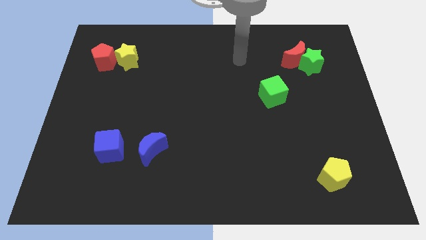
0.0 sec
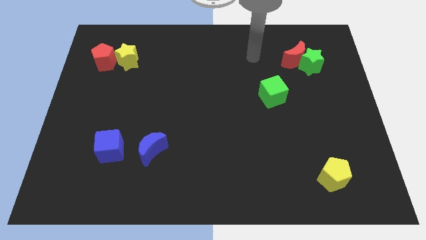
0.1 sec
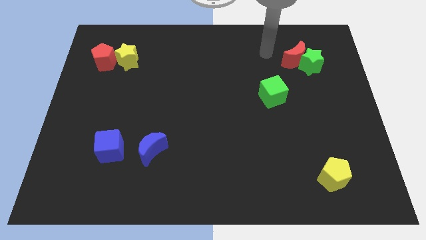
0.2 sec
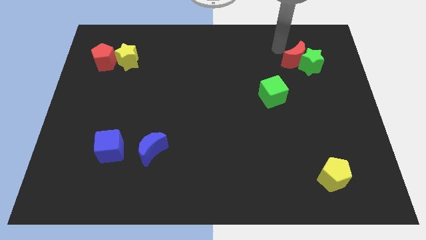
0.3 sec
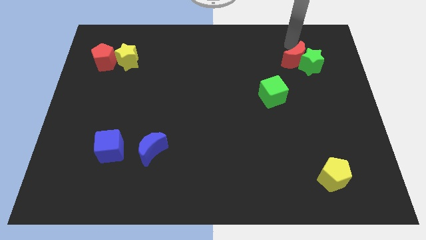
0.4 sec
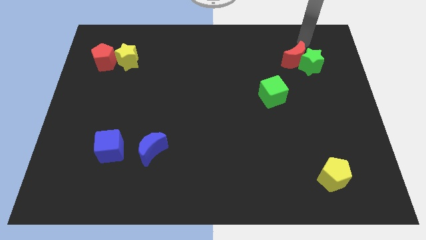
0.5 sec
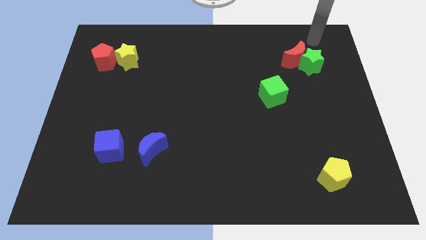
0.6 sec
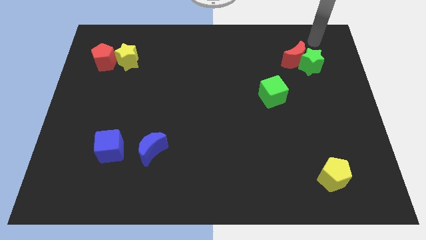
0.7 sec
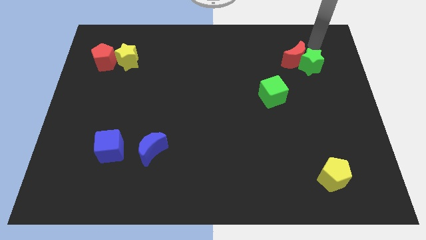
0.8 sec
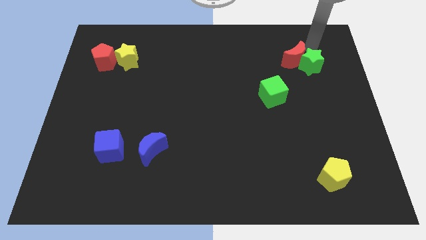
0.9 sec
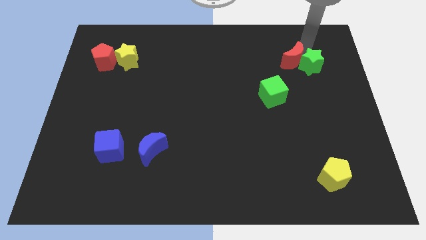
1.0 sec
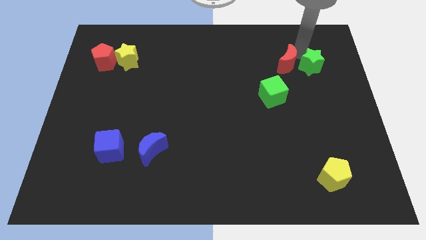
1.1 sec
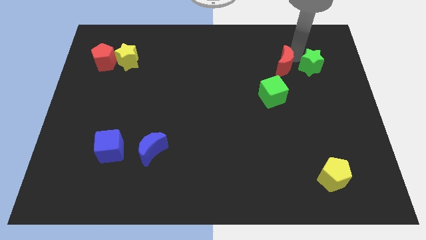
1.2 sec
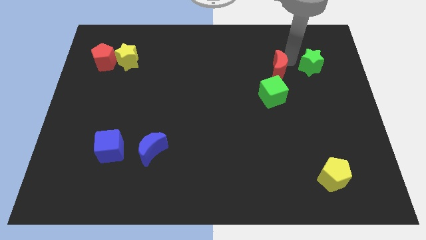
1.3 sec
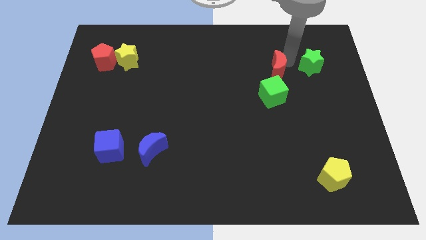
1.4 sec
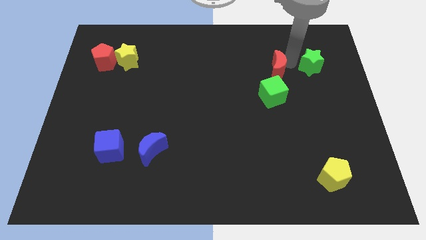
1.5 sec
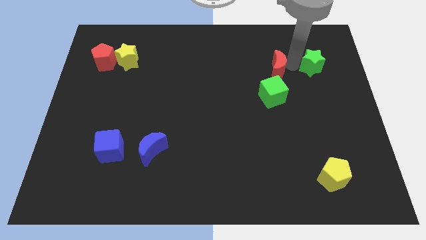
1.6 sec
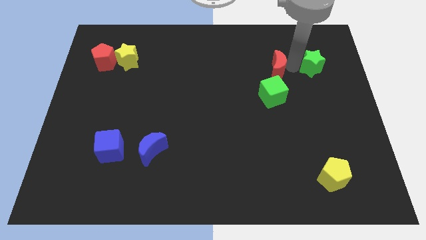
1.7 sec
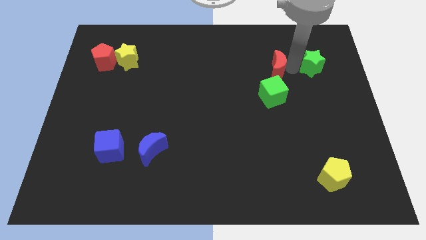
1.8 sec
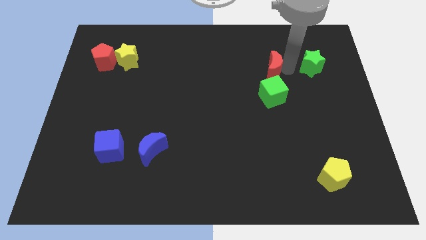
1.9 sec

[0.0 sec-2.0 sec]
place the red moon above the green cube

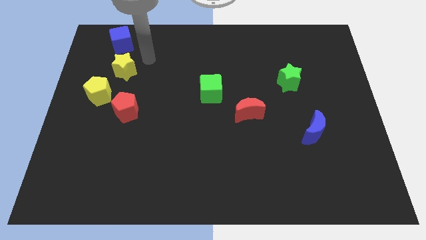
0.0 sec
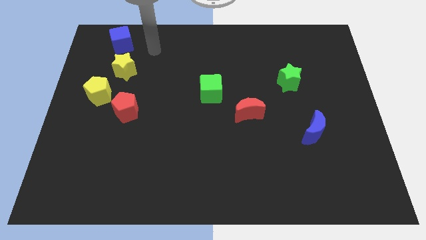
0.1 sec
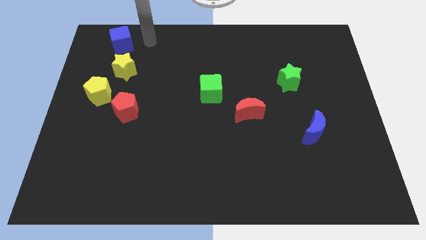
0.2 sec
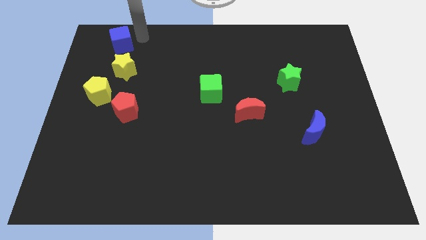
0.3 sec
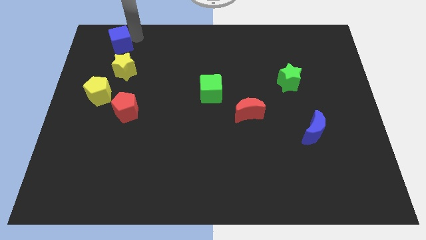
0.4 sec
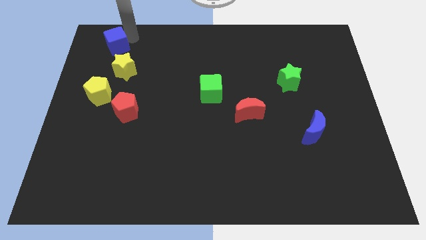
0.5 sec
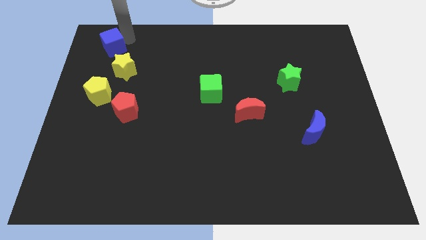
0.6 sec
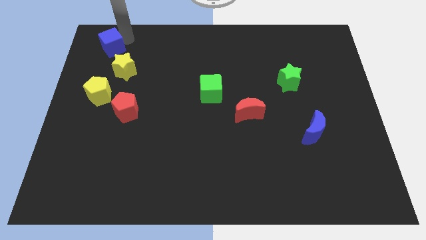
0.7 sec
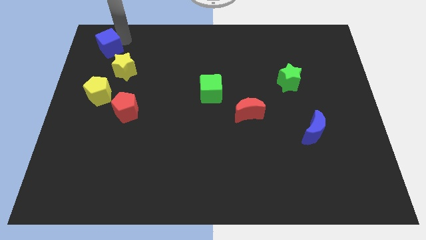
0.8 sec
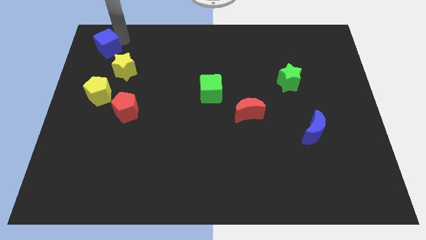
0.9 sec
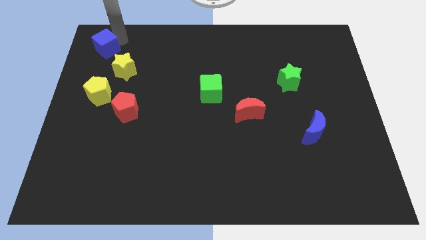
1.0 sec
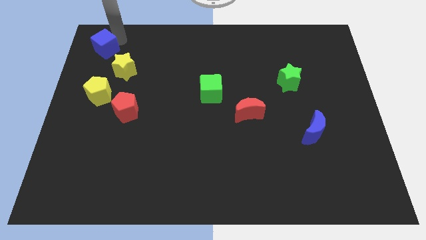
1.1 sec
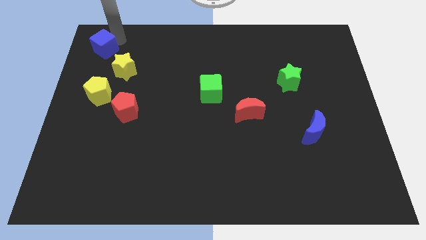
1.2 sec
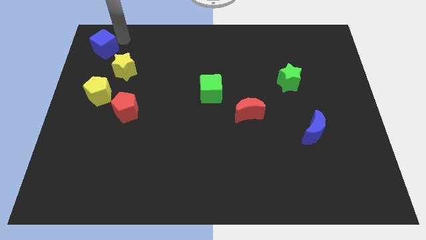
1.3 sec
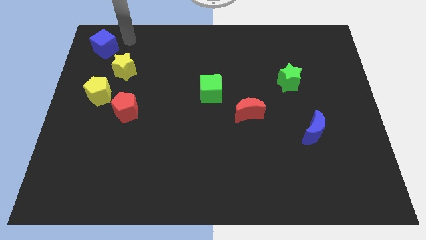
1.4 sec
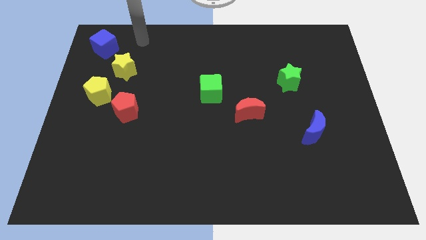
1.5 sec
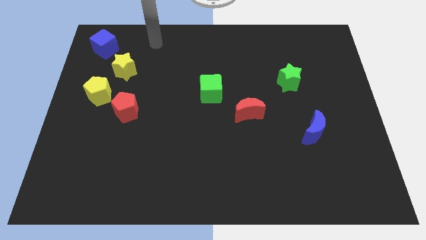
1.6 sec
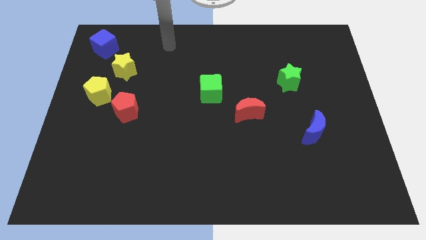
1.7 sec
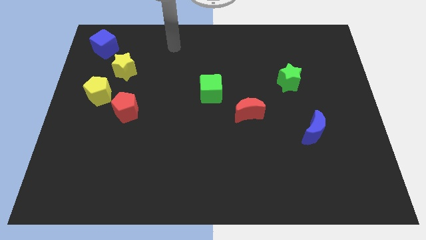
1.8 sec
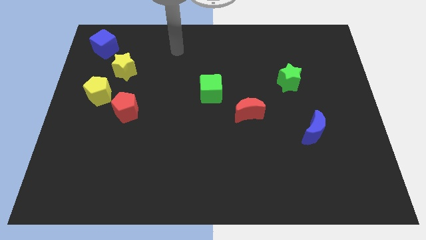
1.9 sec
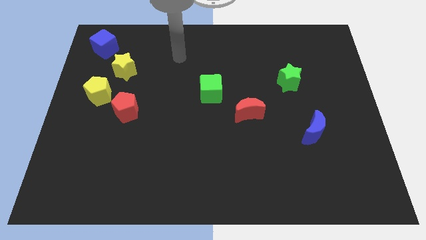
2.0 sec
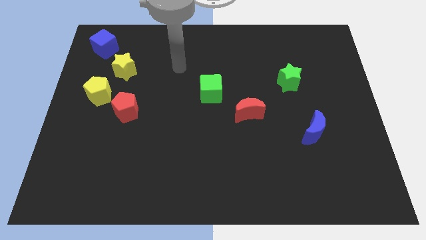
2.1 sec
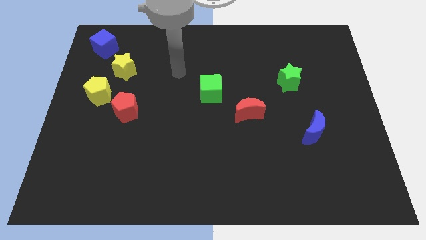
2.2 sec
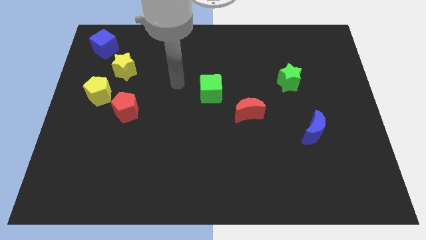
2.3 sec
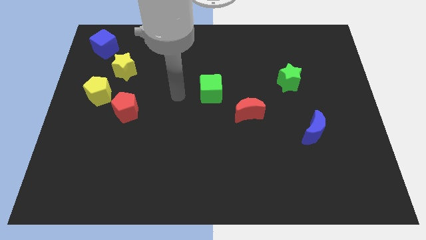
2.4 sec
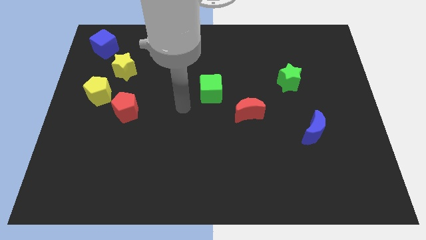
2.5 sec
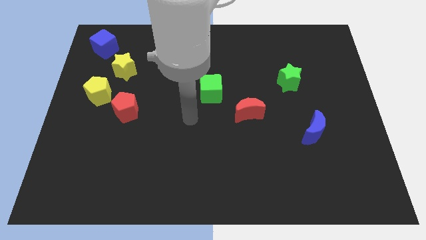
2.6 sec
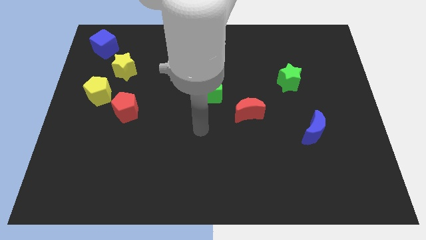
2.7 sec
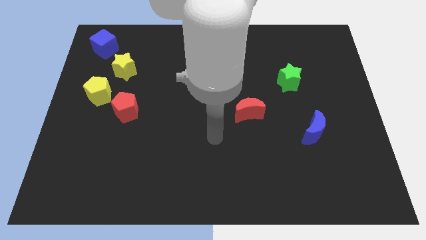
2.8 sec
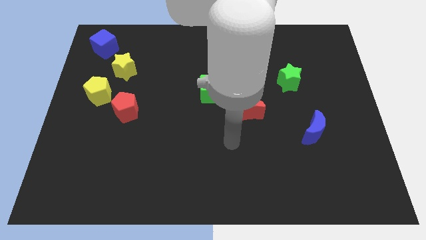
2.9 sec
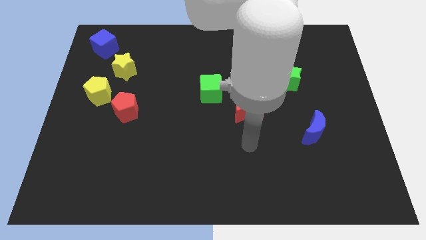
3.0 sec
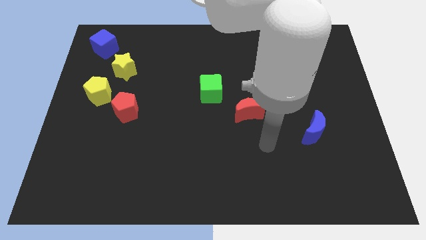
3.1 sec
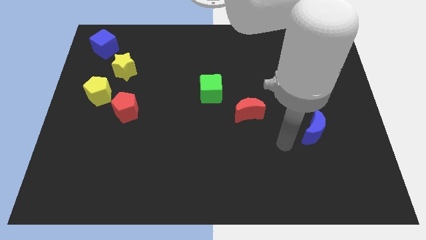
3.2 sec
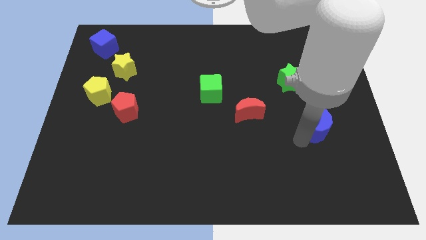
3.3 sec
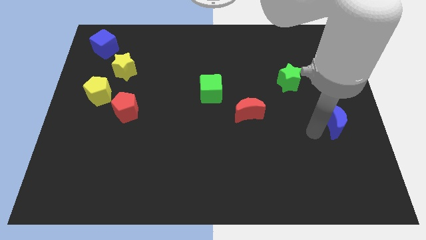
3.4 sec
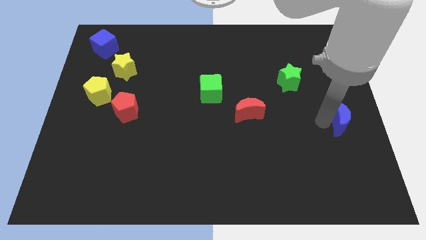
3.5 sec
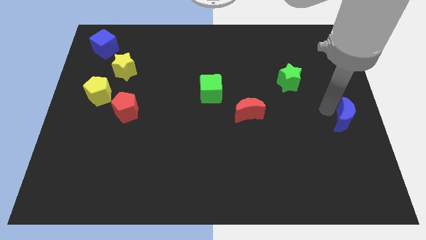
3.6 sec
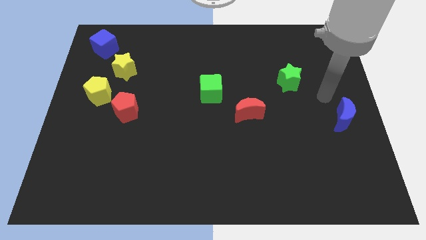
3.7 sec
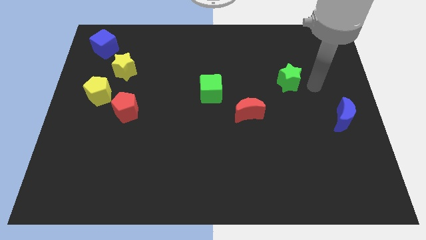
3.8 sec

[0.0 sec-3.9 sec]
move arm near green star

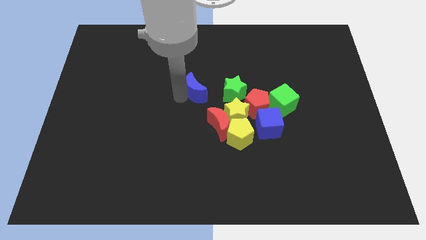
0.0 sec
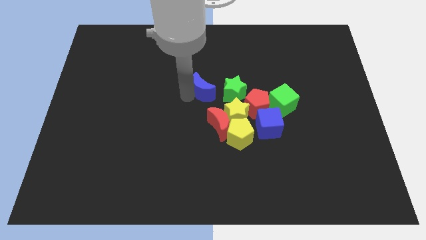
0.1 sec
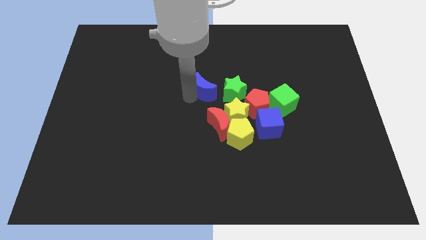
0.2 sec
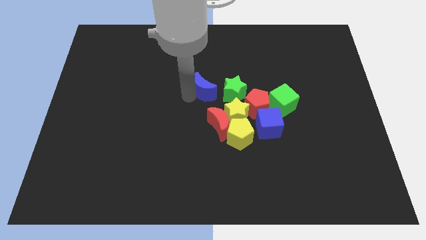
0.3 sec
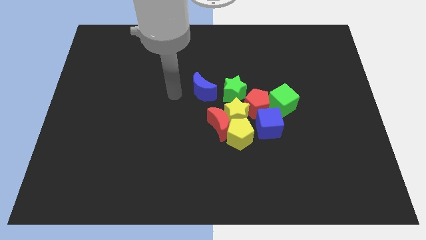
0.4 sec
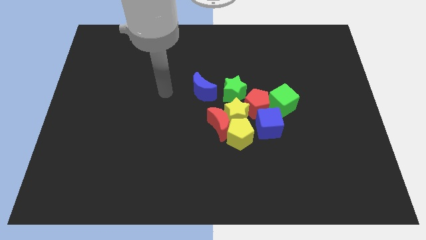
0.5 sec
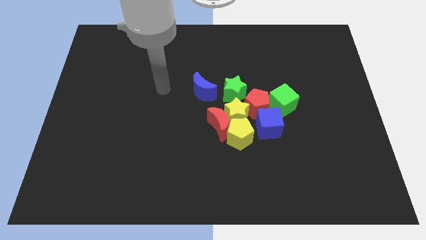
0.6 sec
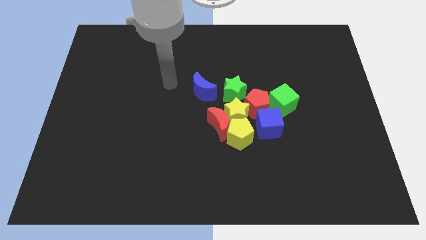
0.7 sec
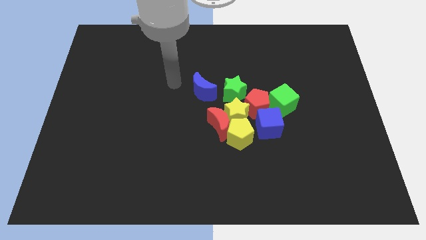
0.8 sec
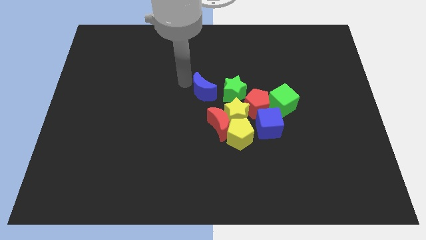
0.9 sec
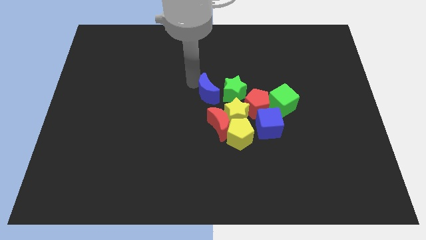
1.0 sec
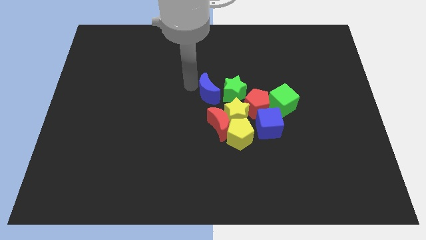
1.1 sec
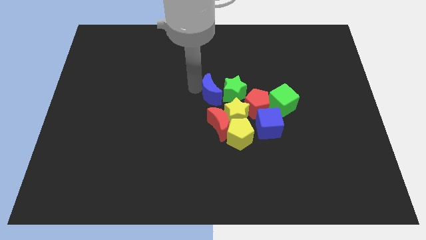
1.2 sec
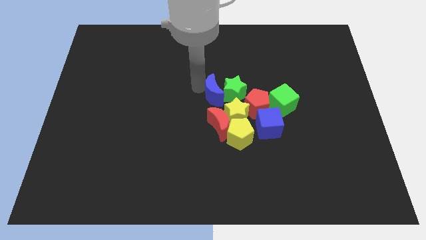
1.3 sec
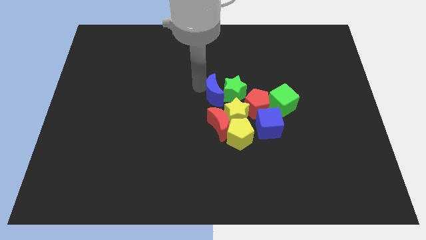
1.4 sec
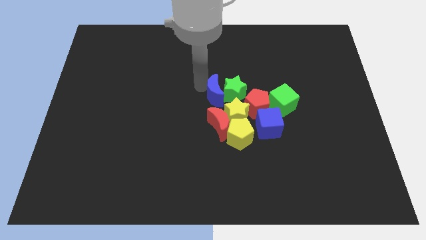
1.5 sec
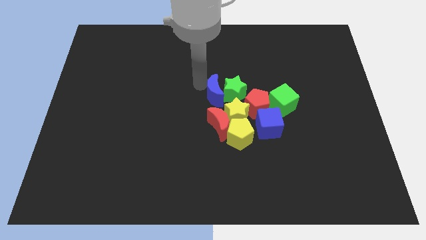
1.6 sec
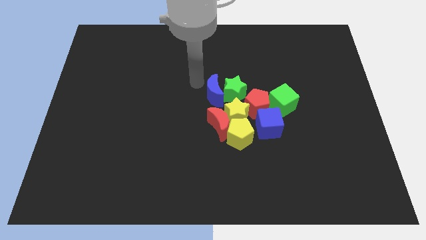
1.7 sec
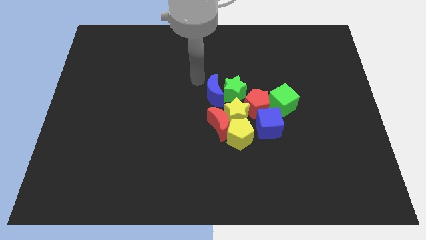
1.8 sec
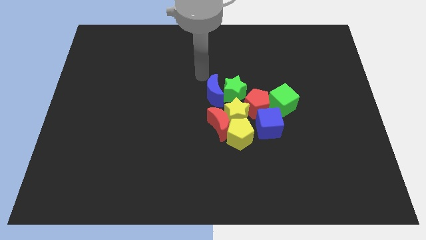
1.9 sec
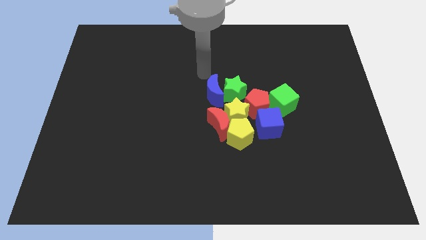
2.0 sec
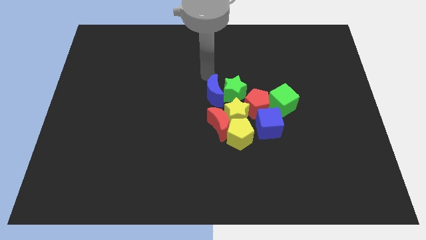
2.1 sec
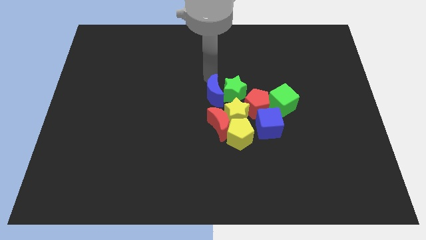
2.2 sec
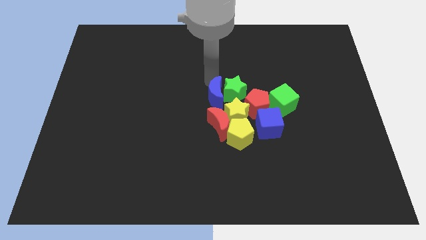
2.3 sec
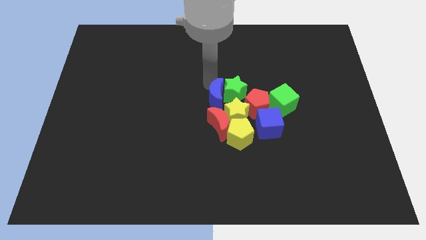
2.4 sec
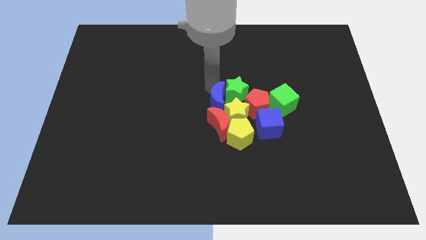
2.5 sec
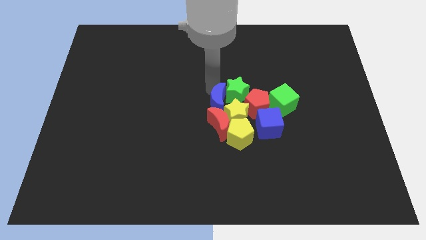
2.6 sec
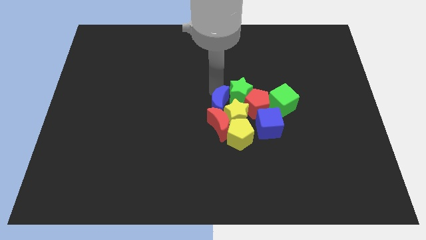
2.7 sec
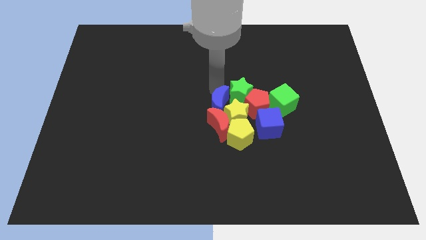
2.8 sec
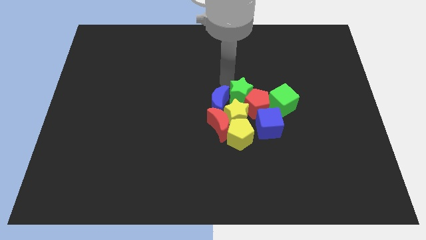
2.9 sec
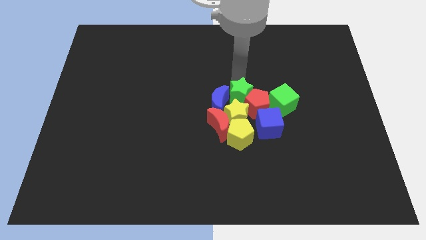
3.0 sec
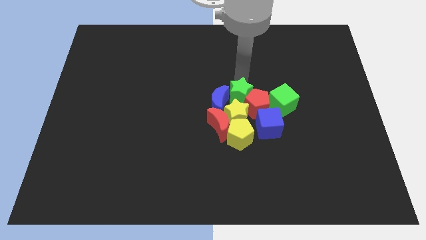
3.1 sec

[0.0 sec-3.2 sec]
move the blue moon to the top of the red moon
